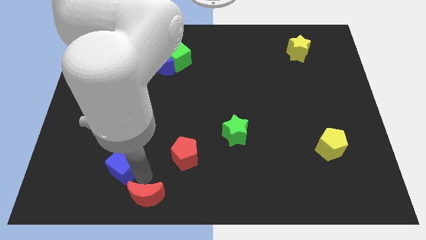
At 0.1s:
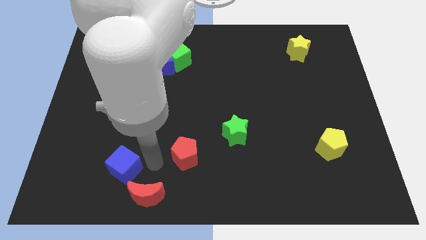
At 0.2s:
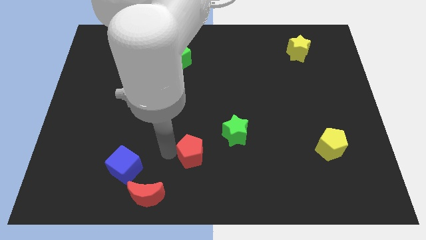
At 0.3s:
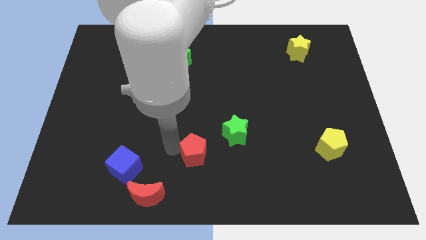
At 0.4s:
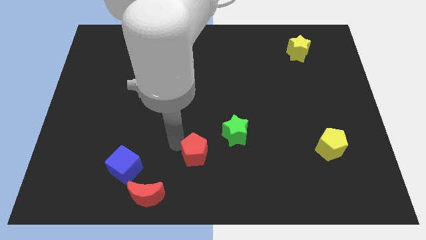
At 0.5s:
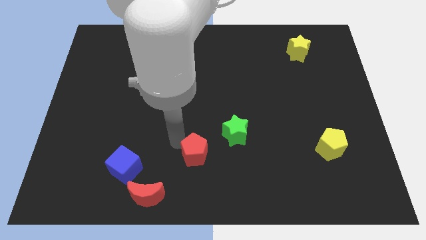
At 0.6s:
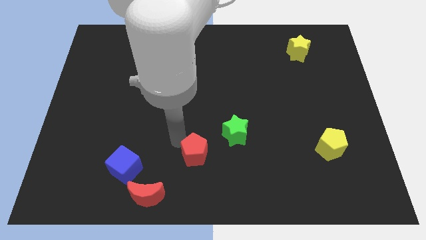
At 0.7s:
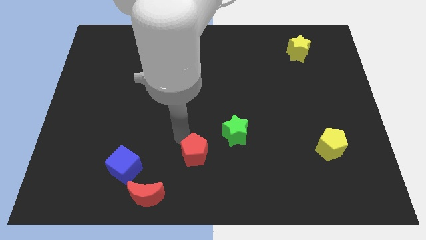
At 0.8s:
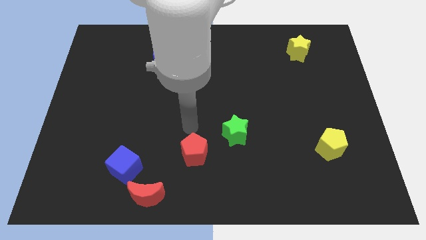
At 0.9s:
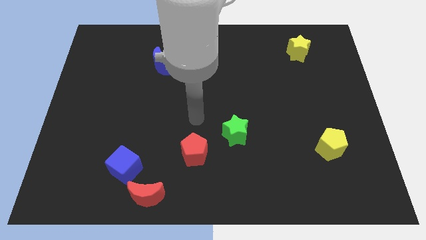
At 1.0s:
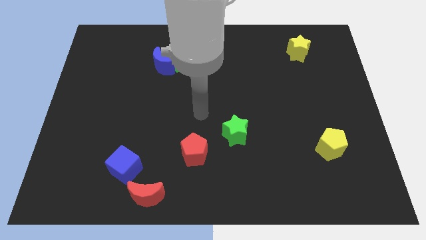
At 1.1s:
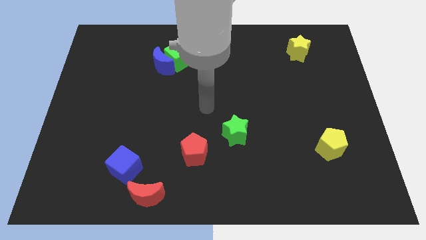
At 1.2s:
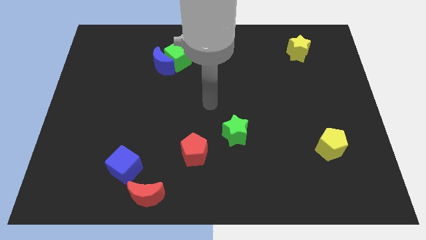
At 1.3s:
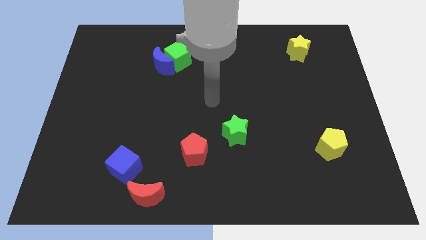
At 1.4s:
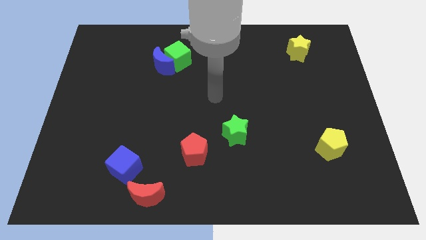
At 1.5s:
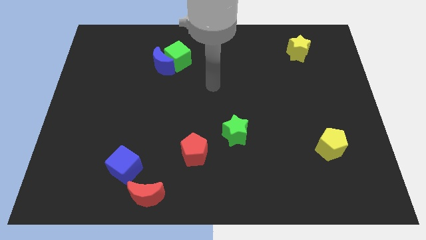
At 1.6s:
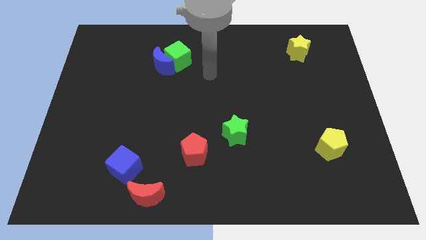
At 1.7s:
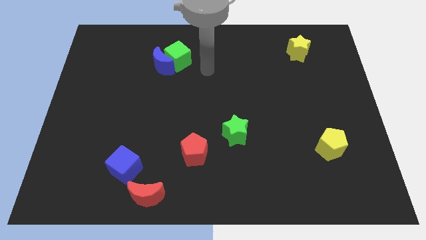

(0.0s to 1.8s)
move your arm away from blue cube

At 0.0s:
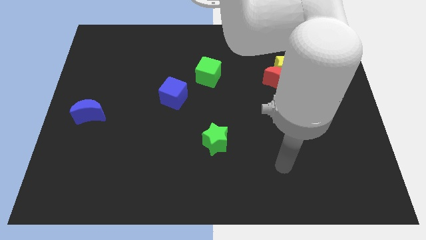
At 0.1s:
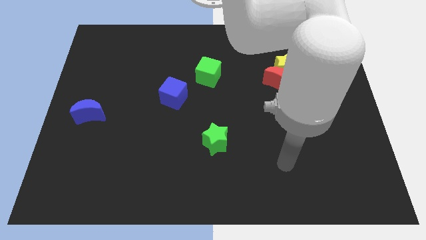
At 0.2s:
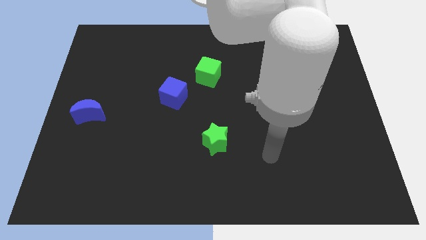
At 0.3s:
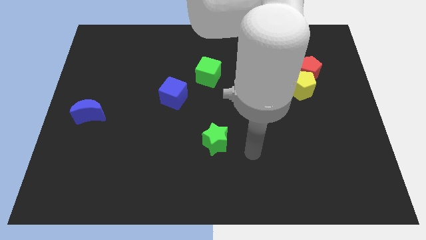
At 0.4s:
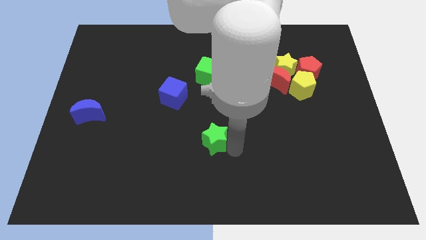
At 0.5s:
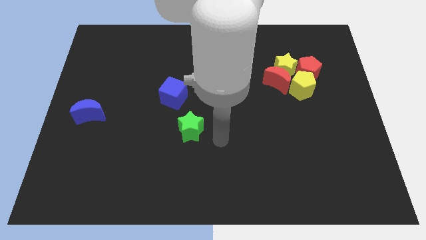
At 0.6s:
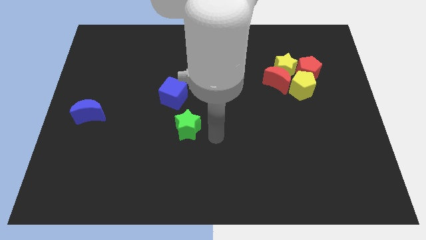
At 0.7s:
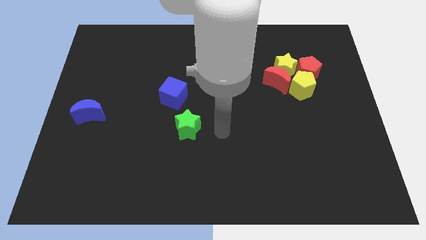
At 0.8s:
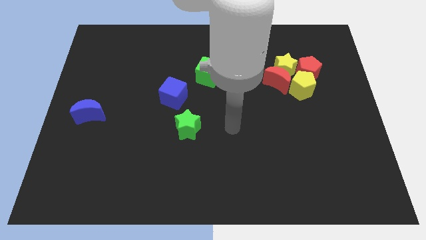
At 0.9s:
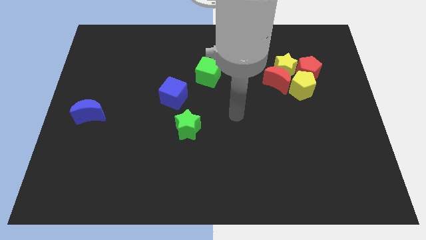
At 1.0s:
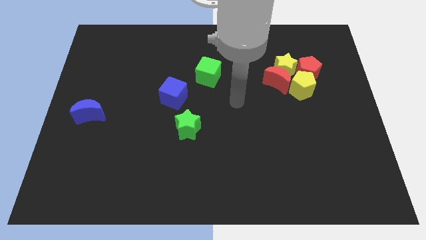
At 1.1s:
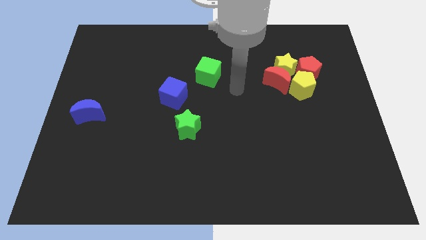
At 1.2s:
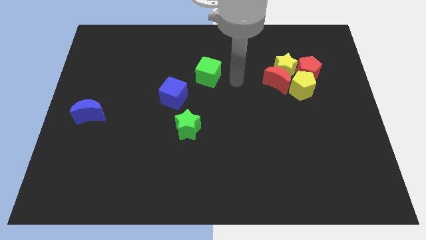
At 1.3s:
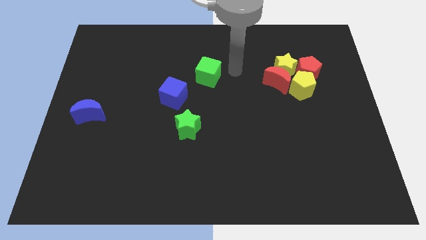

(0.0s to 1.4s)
move green star to the bottom right of blue cube

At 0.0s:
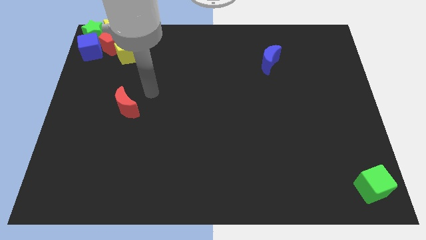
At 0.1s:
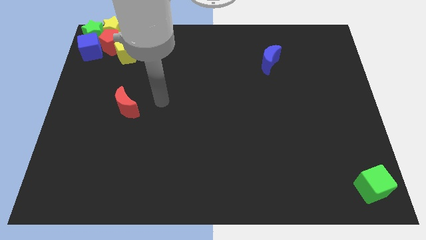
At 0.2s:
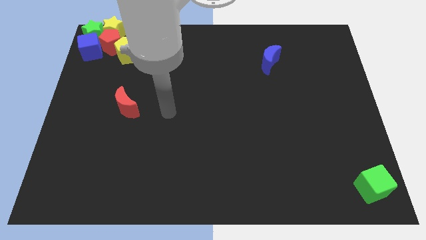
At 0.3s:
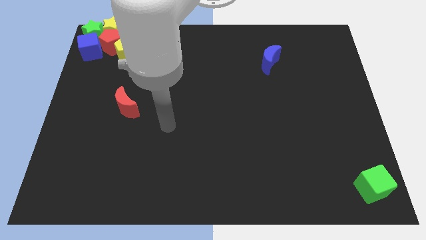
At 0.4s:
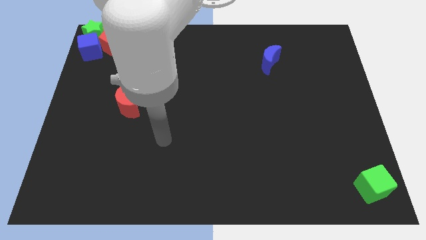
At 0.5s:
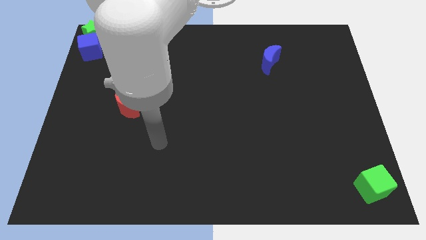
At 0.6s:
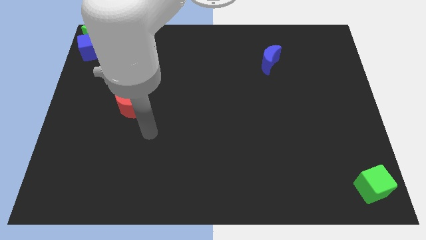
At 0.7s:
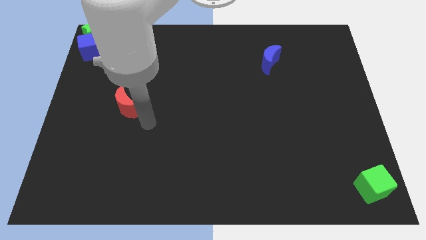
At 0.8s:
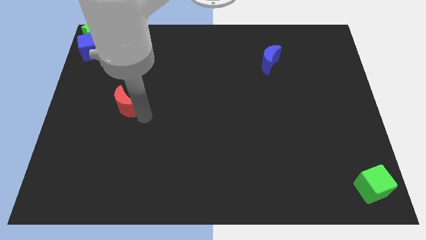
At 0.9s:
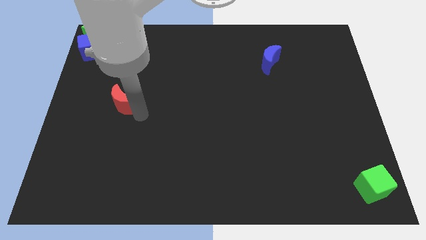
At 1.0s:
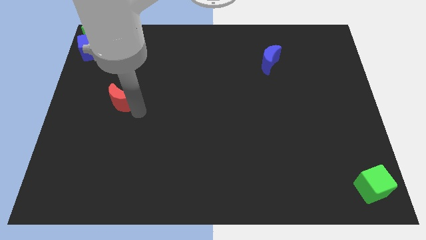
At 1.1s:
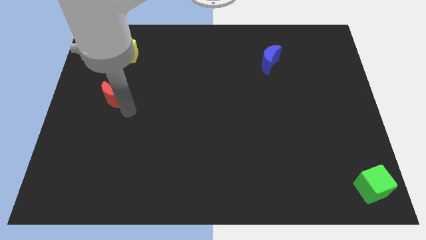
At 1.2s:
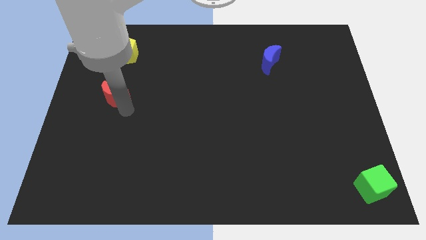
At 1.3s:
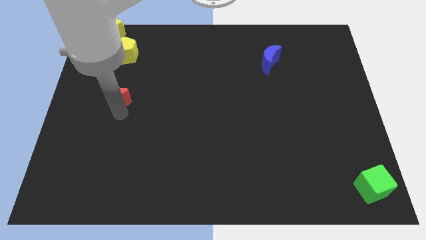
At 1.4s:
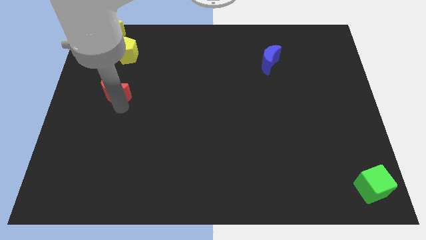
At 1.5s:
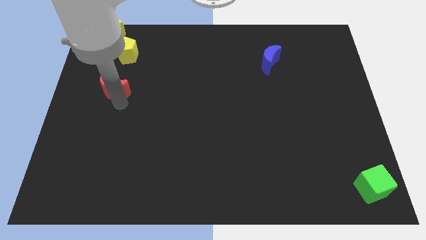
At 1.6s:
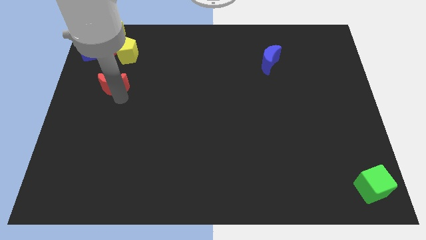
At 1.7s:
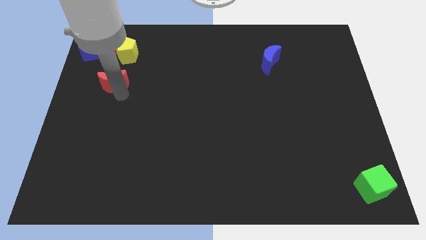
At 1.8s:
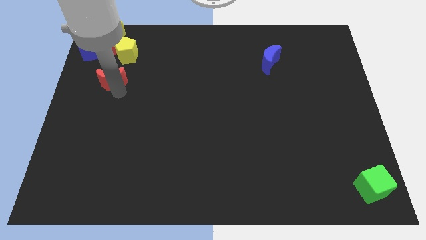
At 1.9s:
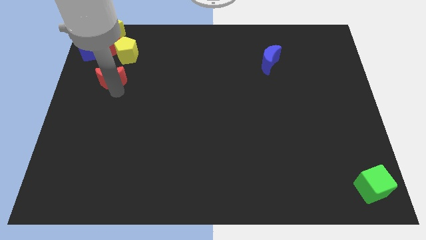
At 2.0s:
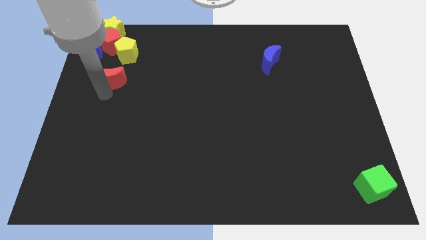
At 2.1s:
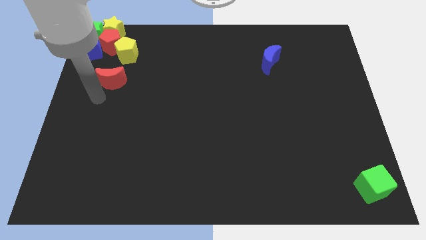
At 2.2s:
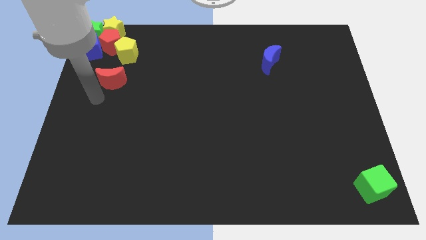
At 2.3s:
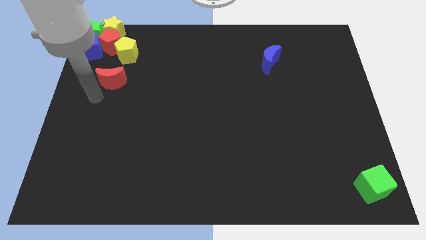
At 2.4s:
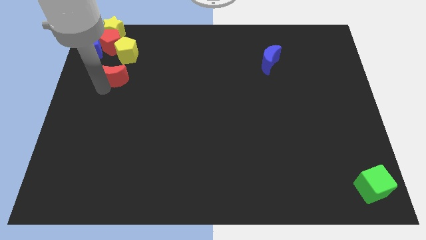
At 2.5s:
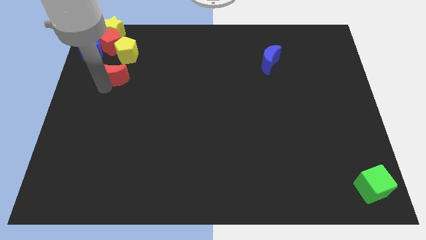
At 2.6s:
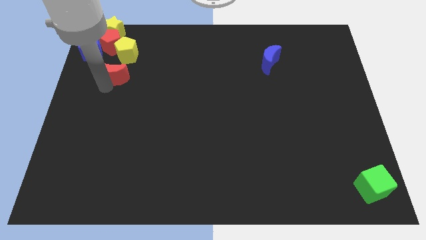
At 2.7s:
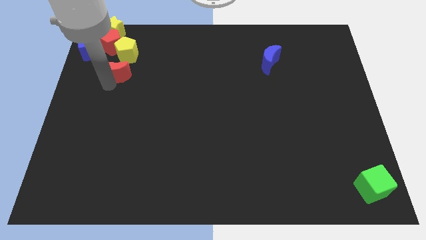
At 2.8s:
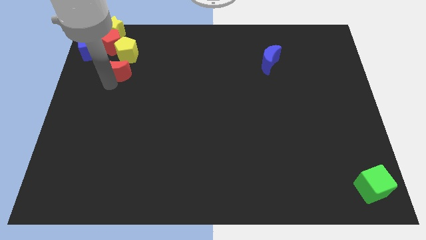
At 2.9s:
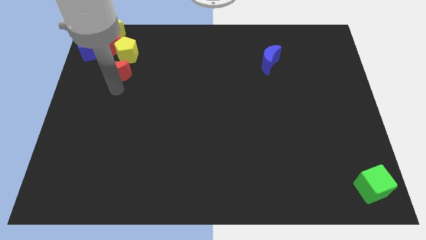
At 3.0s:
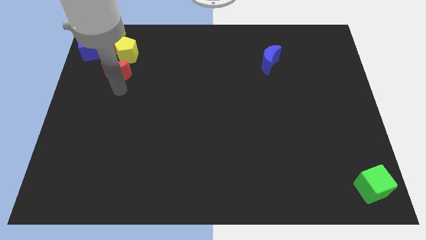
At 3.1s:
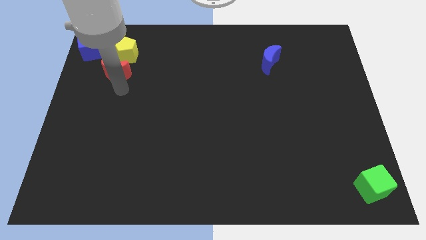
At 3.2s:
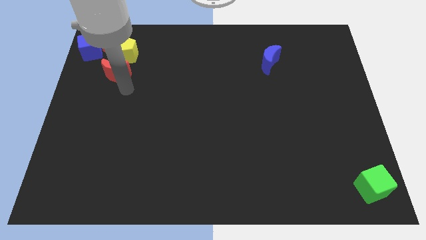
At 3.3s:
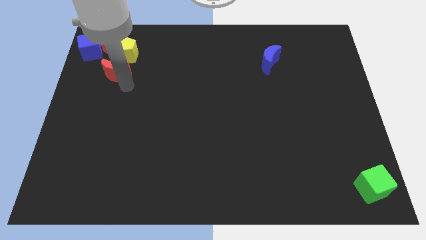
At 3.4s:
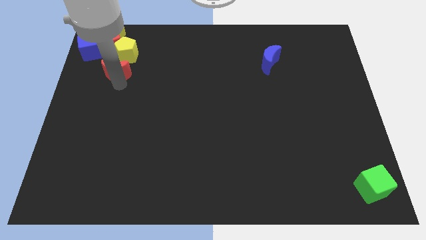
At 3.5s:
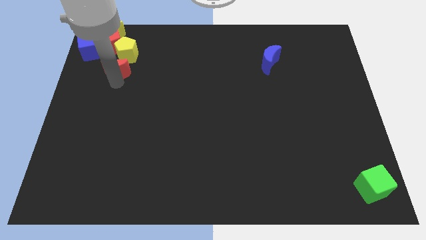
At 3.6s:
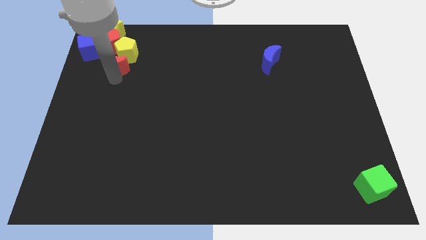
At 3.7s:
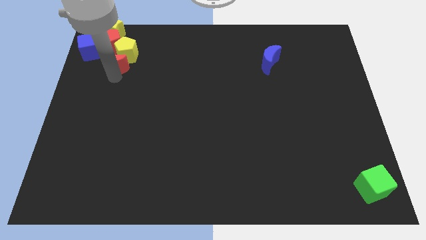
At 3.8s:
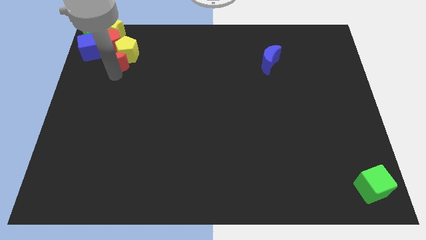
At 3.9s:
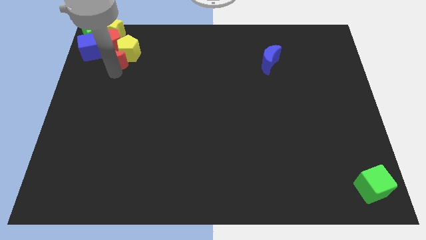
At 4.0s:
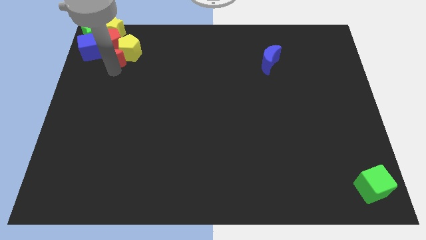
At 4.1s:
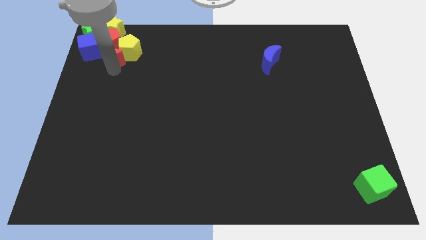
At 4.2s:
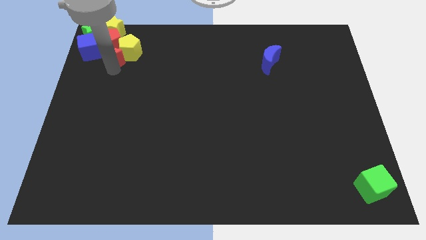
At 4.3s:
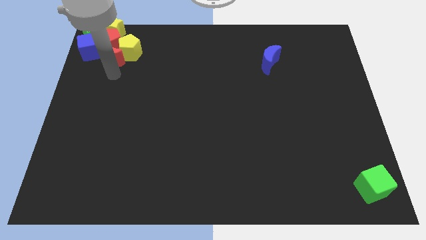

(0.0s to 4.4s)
push the red moon into the group of blocks

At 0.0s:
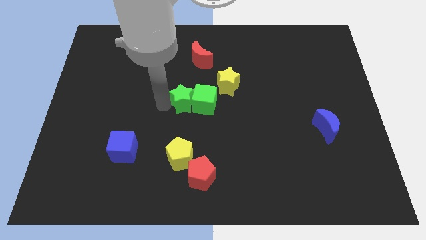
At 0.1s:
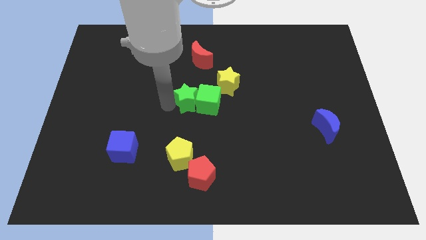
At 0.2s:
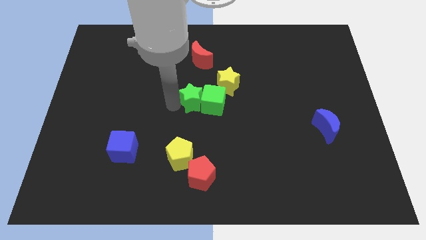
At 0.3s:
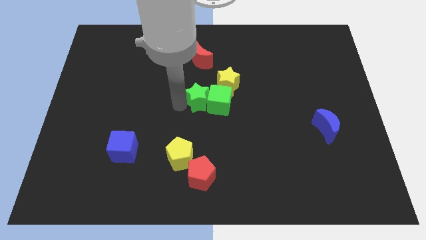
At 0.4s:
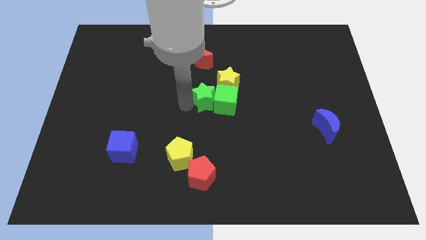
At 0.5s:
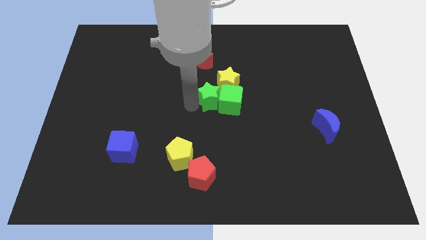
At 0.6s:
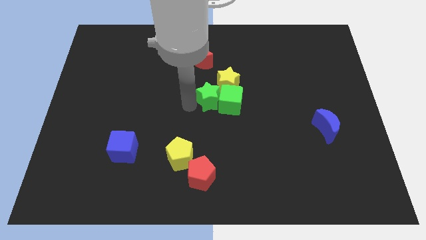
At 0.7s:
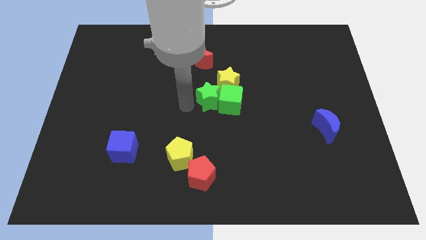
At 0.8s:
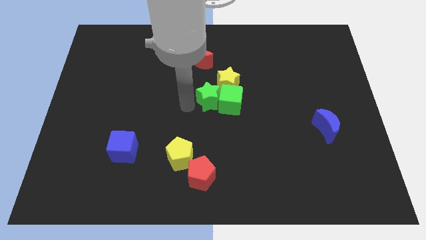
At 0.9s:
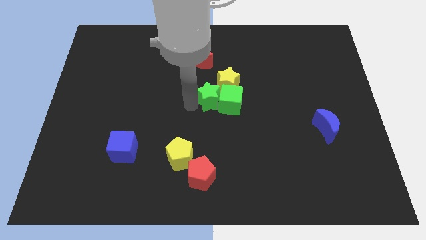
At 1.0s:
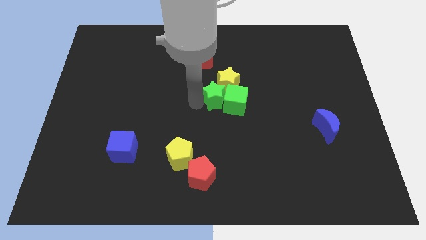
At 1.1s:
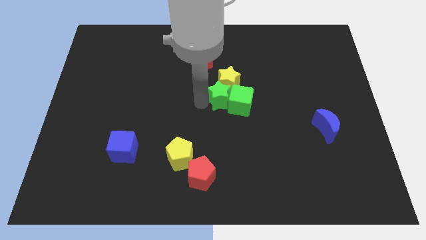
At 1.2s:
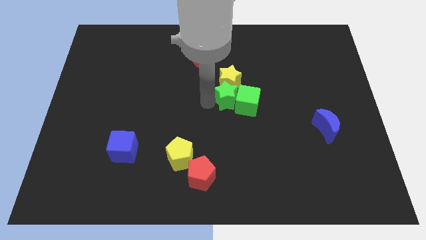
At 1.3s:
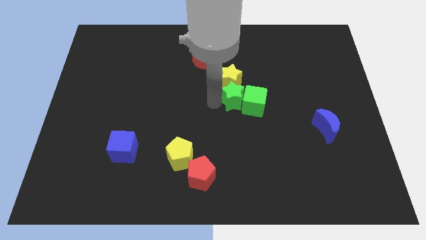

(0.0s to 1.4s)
place the green star at the bottom of the yellow star
